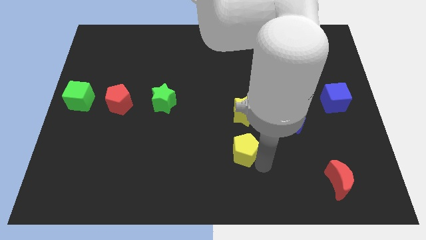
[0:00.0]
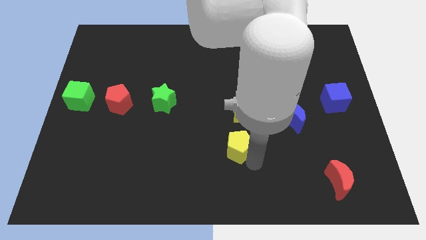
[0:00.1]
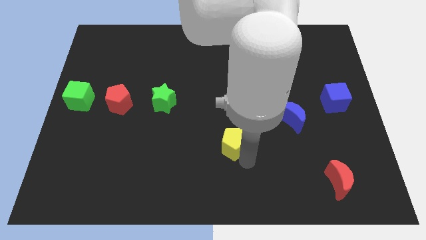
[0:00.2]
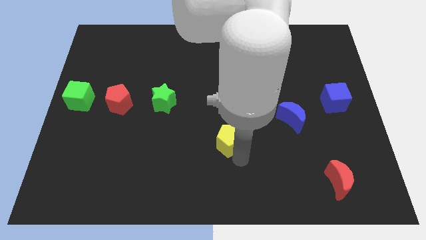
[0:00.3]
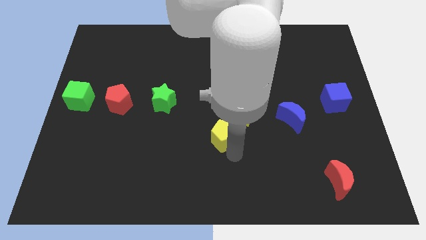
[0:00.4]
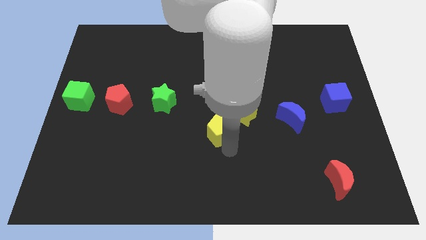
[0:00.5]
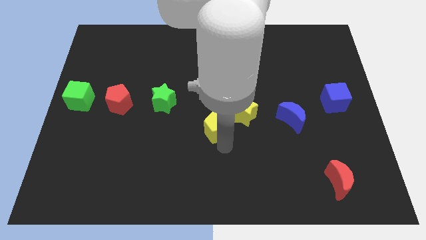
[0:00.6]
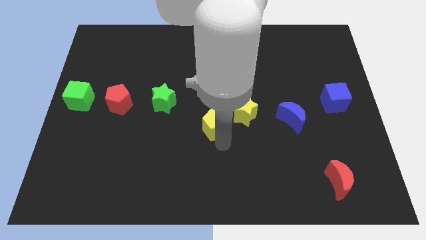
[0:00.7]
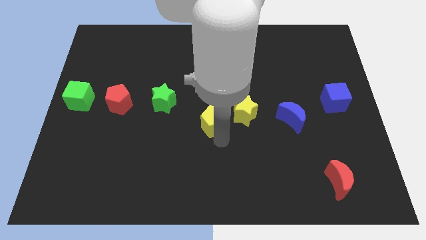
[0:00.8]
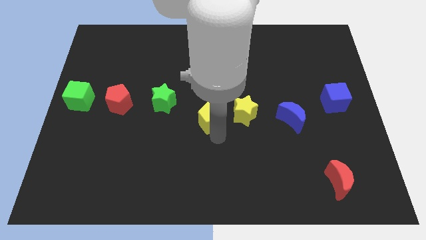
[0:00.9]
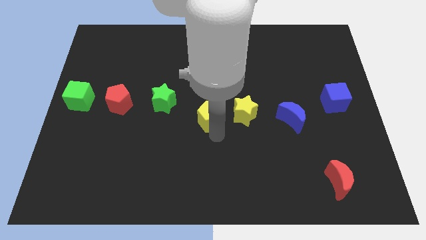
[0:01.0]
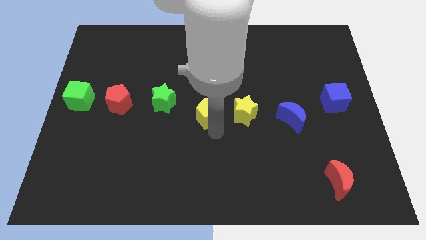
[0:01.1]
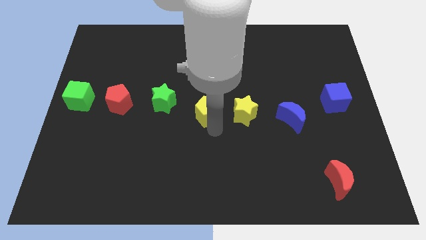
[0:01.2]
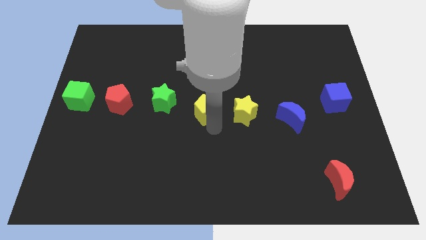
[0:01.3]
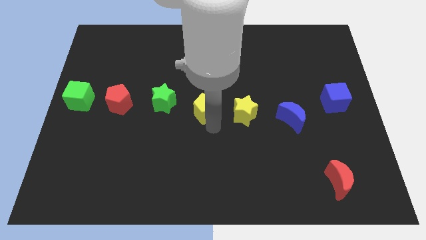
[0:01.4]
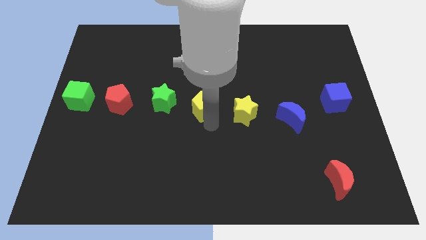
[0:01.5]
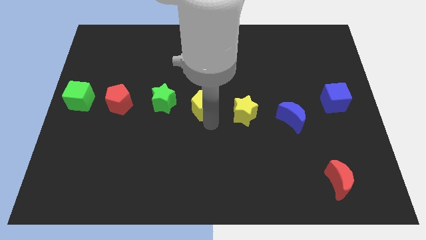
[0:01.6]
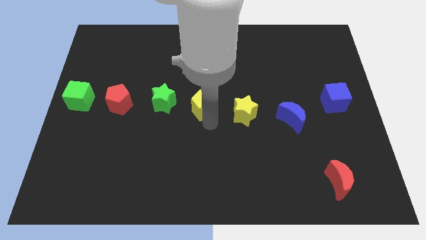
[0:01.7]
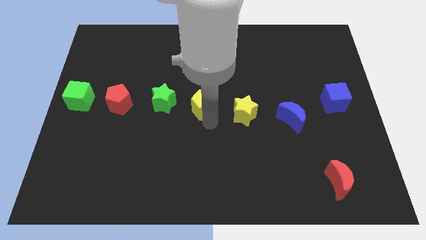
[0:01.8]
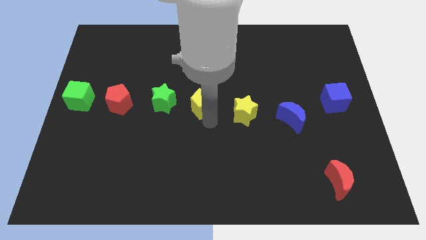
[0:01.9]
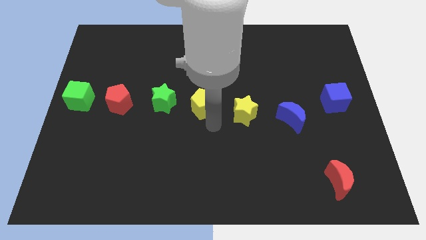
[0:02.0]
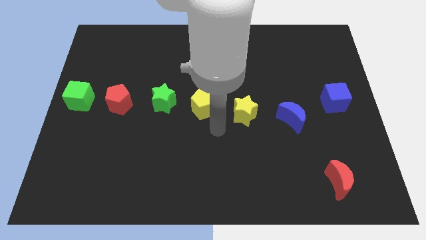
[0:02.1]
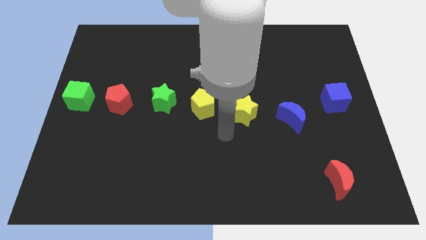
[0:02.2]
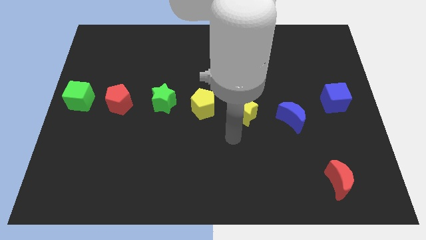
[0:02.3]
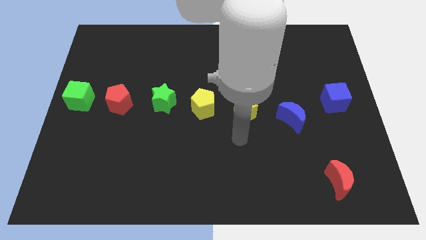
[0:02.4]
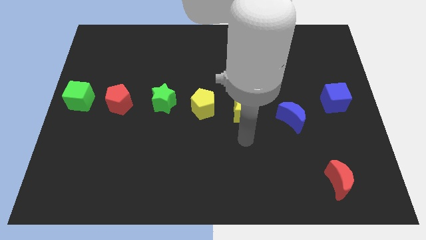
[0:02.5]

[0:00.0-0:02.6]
move the yellow pentagon horizontal line

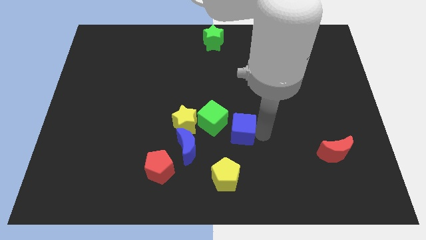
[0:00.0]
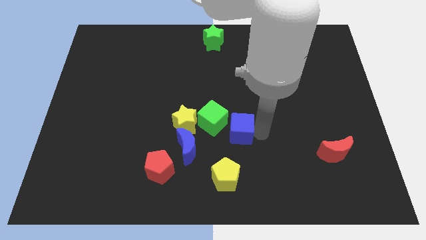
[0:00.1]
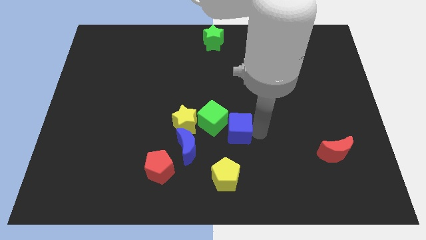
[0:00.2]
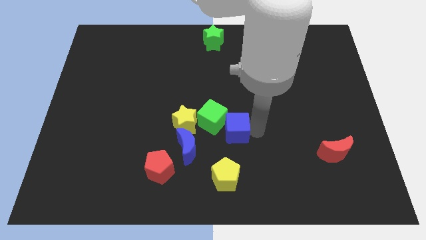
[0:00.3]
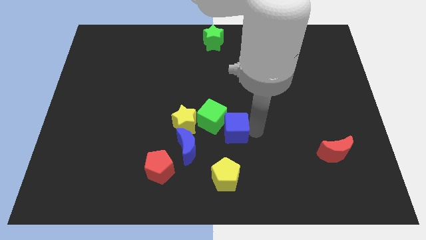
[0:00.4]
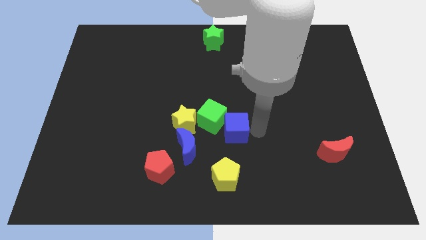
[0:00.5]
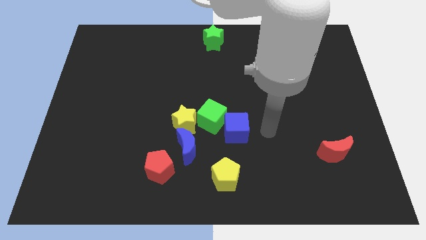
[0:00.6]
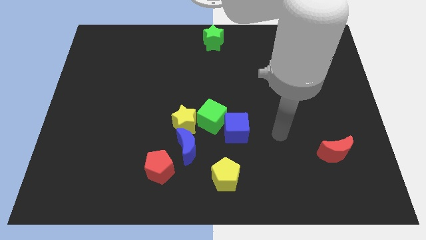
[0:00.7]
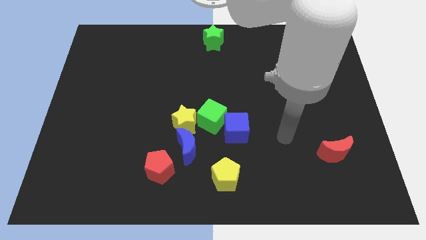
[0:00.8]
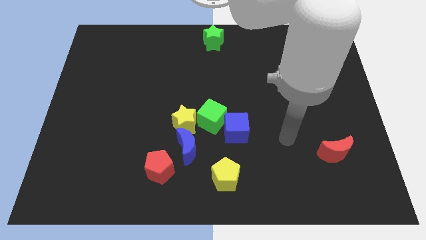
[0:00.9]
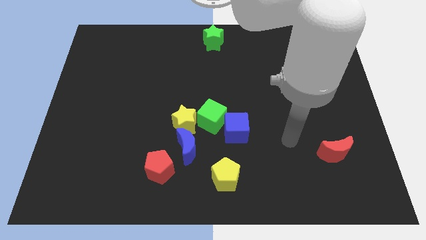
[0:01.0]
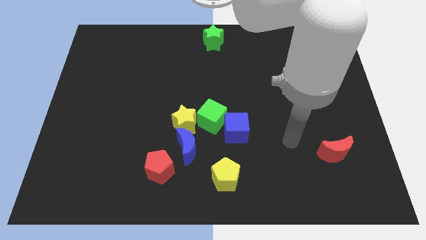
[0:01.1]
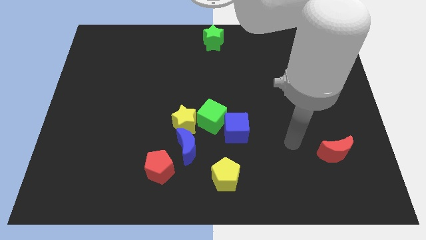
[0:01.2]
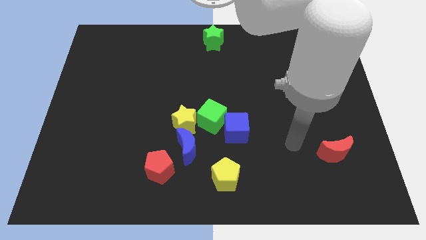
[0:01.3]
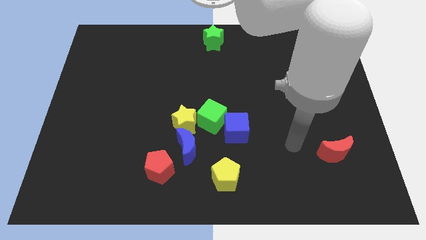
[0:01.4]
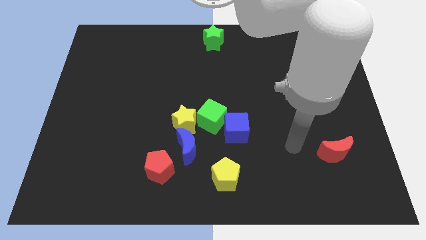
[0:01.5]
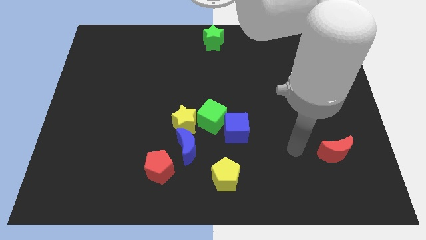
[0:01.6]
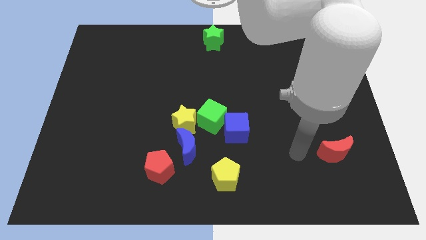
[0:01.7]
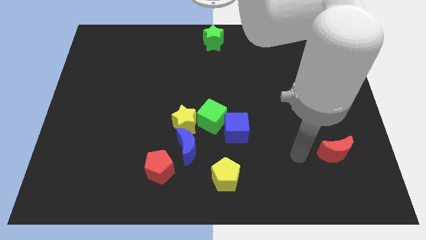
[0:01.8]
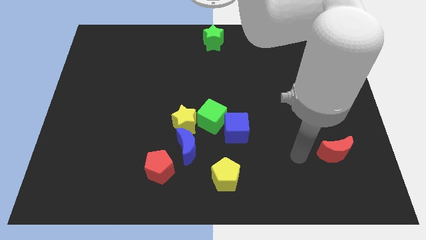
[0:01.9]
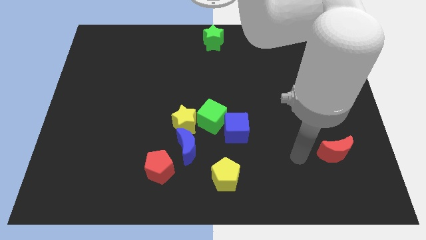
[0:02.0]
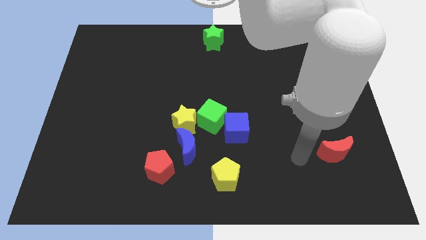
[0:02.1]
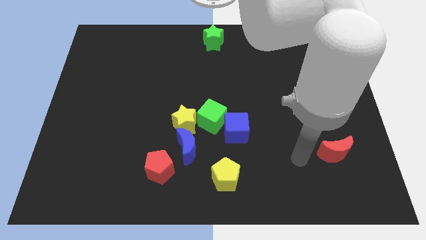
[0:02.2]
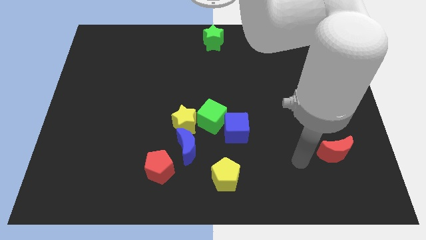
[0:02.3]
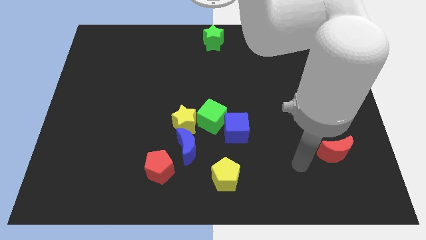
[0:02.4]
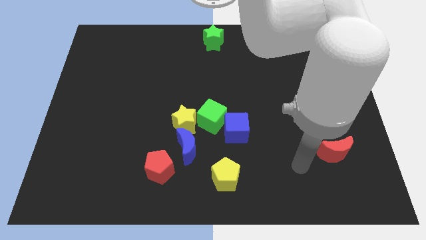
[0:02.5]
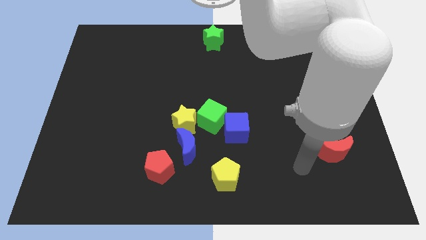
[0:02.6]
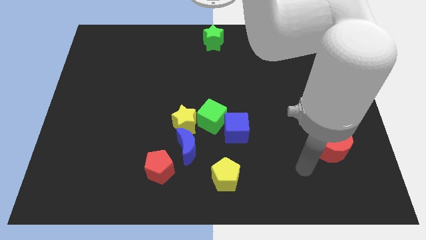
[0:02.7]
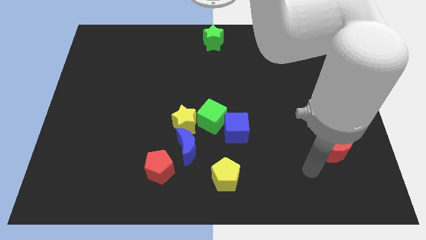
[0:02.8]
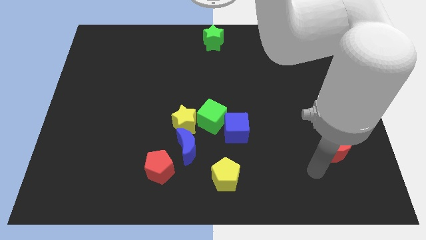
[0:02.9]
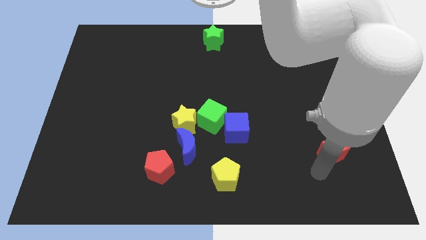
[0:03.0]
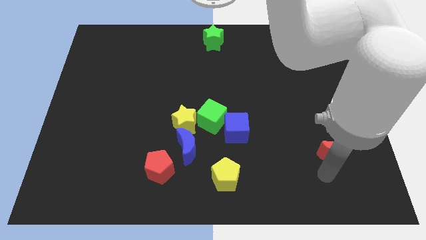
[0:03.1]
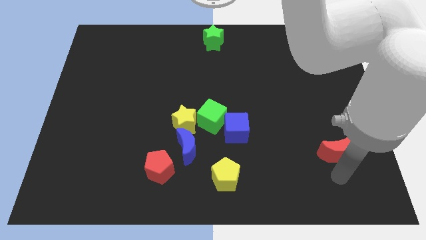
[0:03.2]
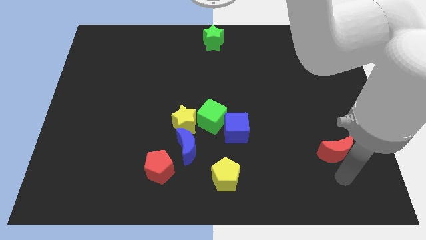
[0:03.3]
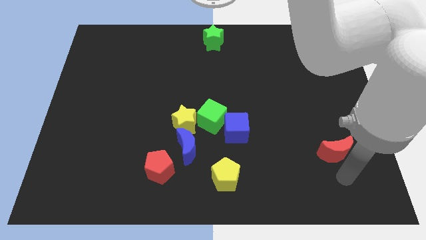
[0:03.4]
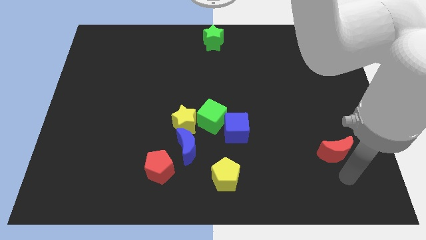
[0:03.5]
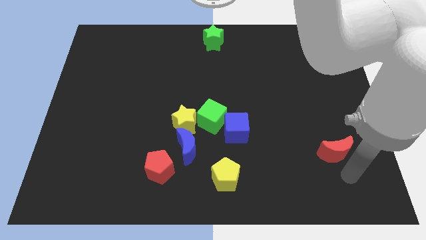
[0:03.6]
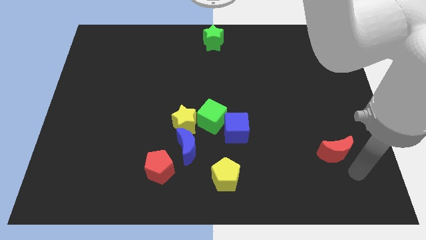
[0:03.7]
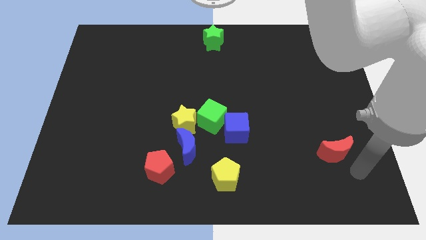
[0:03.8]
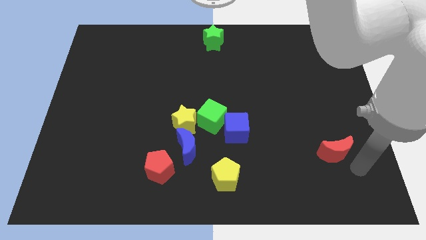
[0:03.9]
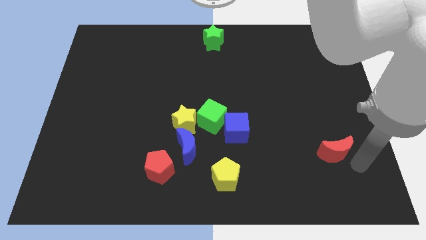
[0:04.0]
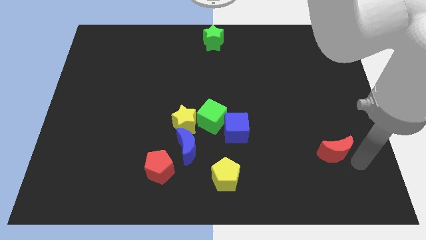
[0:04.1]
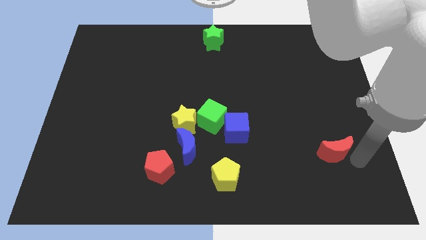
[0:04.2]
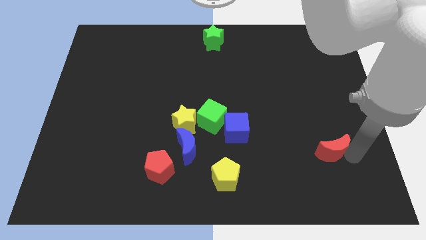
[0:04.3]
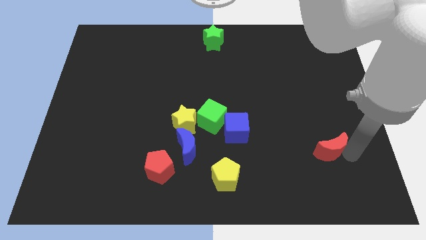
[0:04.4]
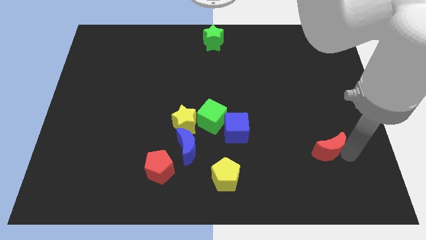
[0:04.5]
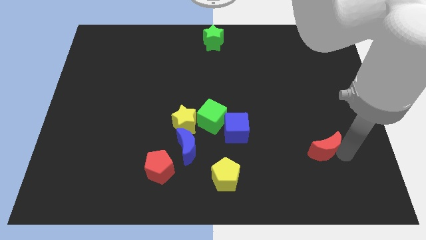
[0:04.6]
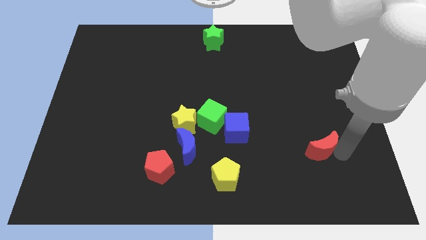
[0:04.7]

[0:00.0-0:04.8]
move your arm close to the red moon

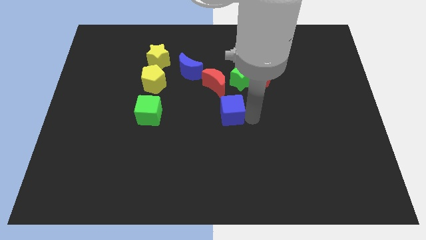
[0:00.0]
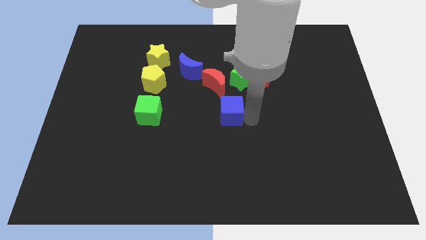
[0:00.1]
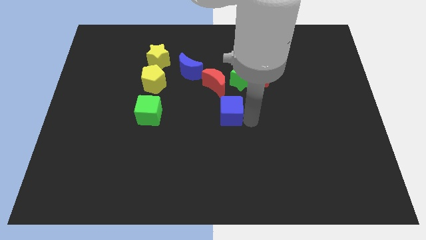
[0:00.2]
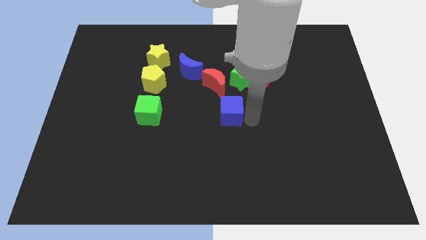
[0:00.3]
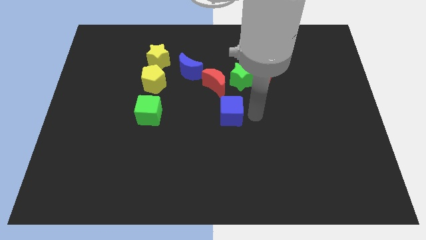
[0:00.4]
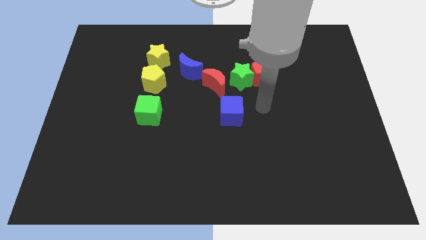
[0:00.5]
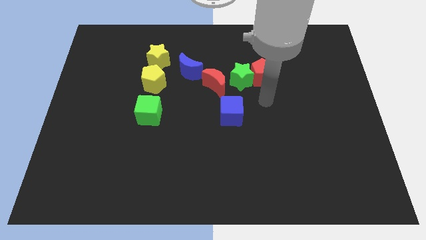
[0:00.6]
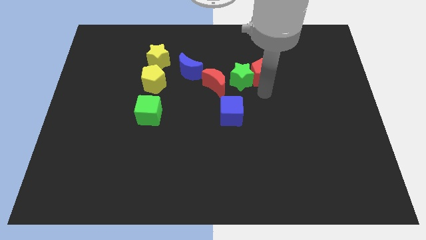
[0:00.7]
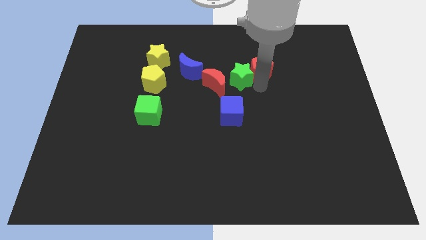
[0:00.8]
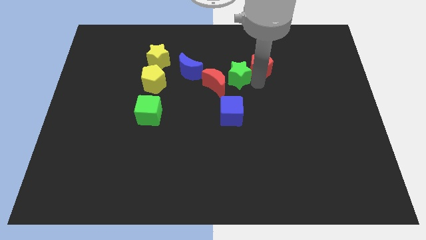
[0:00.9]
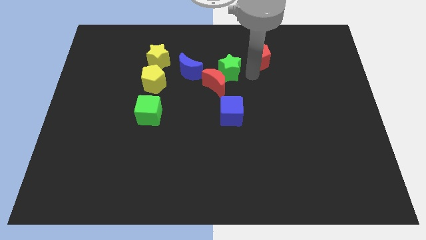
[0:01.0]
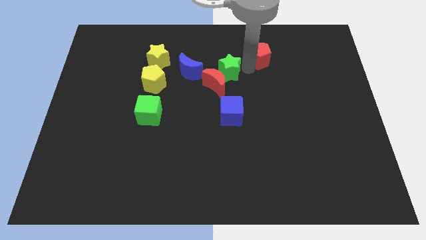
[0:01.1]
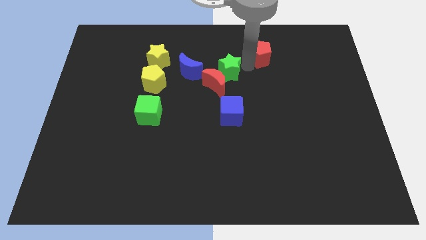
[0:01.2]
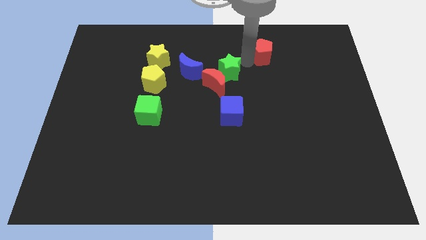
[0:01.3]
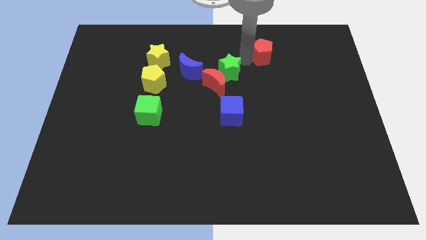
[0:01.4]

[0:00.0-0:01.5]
move green star towards the red crescent
